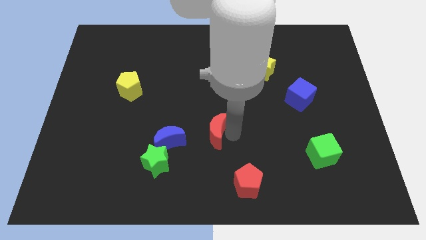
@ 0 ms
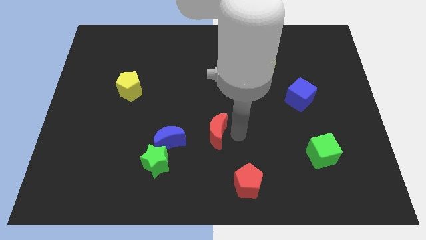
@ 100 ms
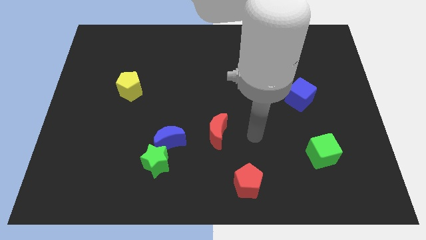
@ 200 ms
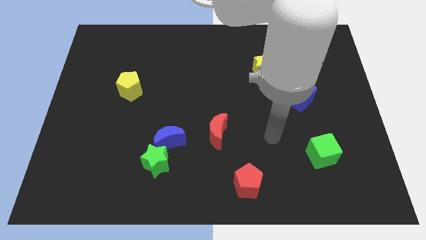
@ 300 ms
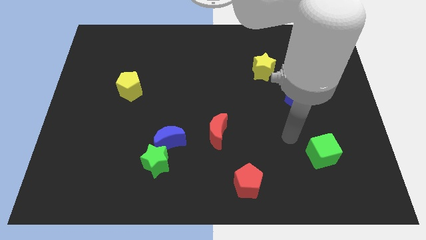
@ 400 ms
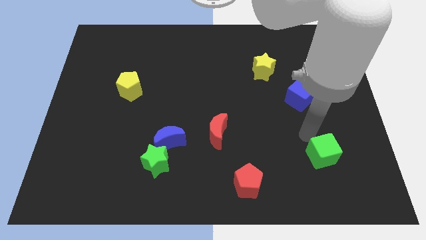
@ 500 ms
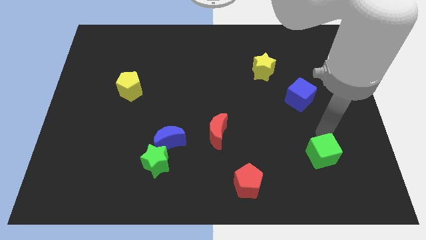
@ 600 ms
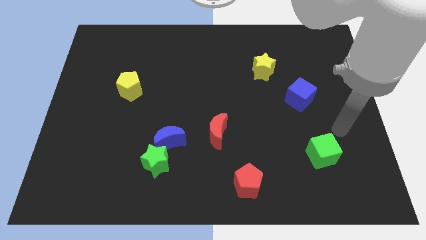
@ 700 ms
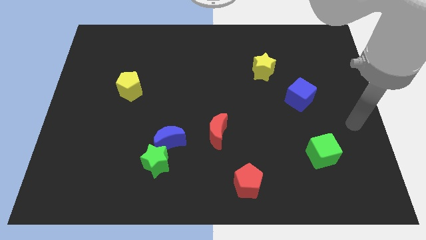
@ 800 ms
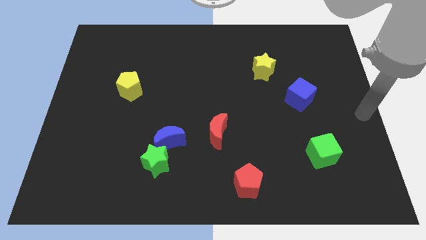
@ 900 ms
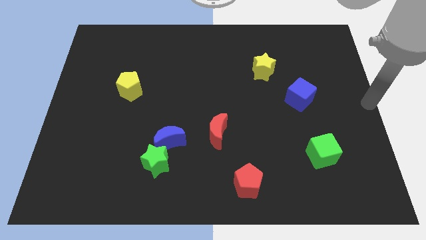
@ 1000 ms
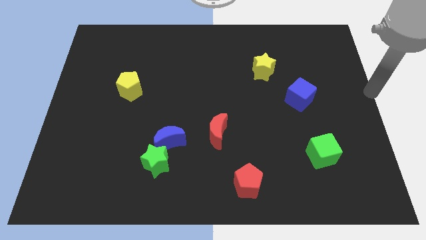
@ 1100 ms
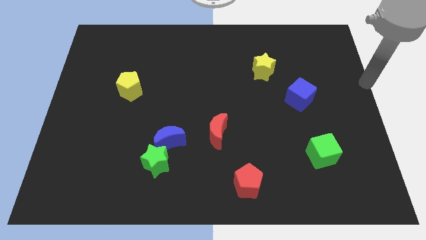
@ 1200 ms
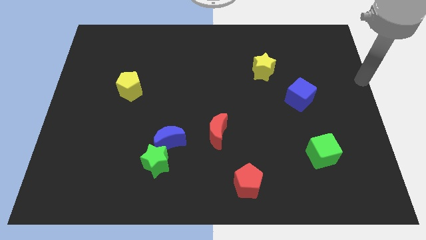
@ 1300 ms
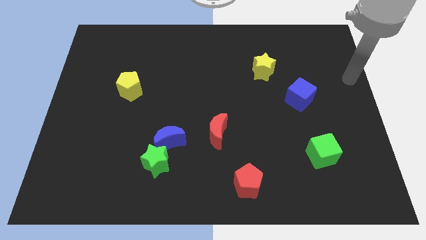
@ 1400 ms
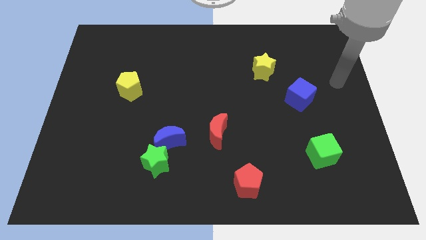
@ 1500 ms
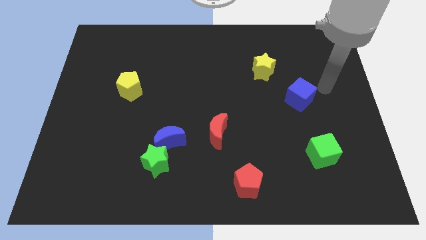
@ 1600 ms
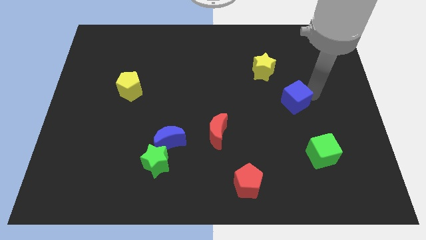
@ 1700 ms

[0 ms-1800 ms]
move your arm towards blue cube

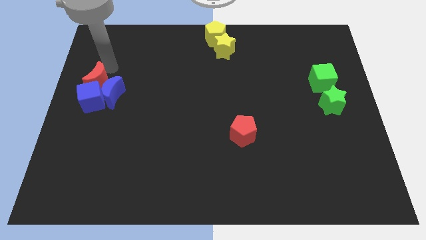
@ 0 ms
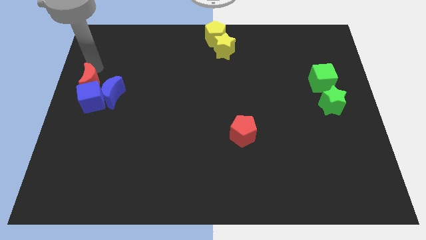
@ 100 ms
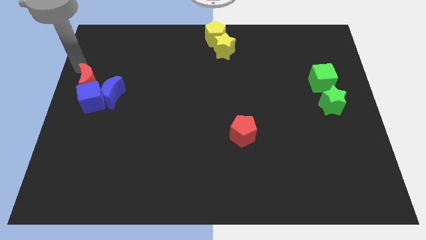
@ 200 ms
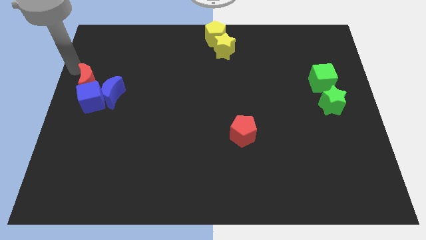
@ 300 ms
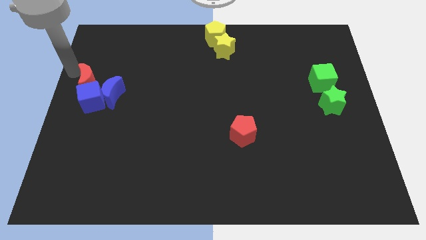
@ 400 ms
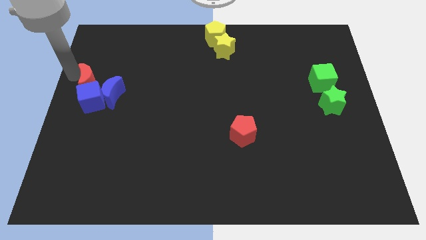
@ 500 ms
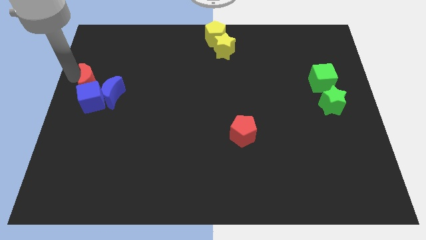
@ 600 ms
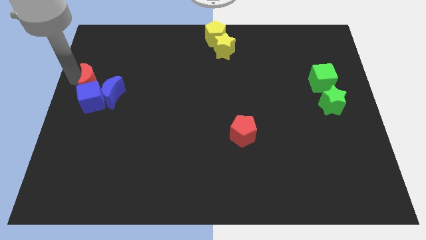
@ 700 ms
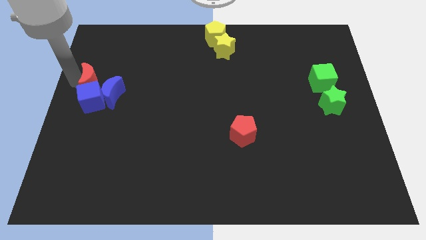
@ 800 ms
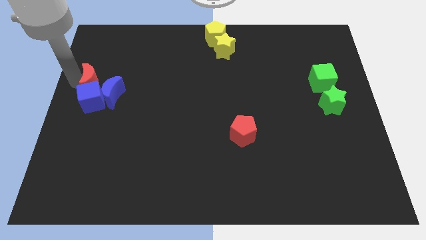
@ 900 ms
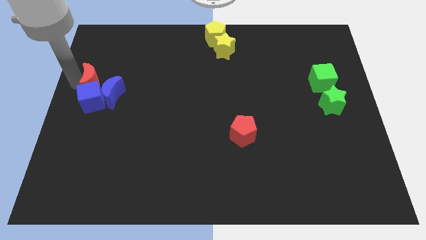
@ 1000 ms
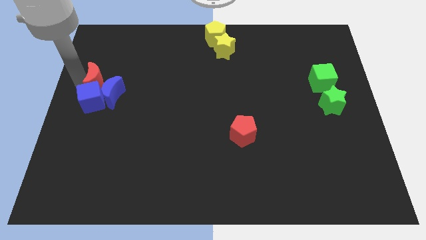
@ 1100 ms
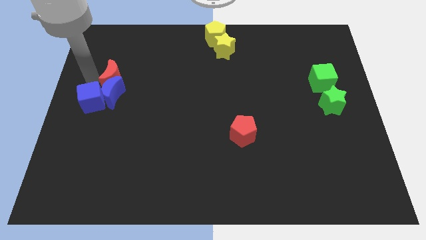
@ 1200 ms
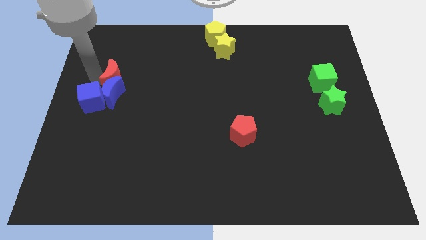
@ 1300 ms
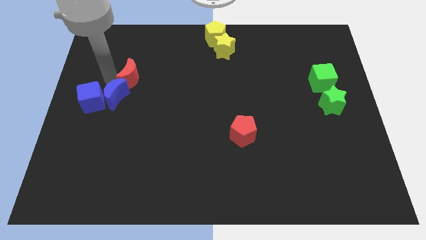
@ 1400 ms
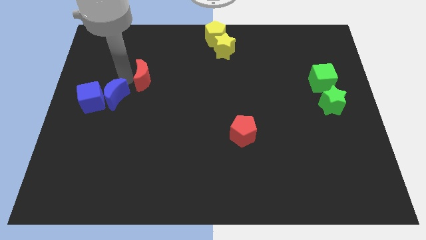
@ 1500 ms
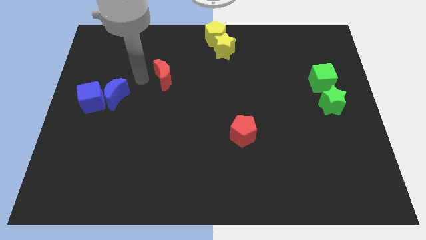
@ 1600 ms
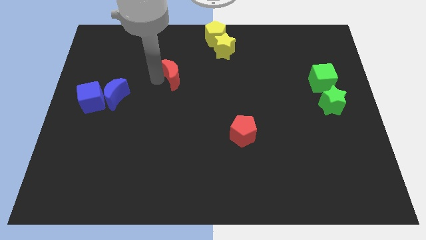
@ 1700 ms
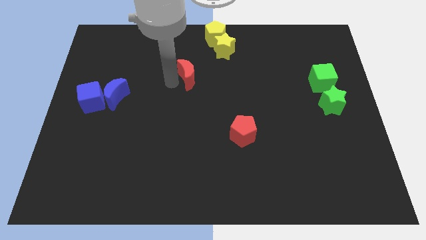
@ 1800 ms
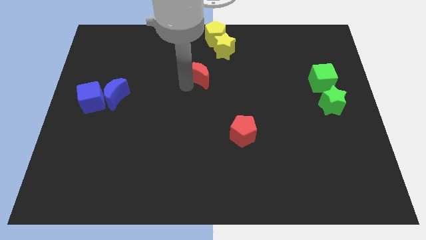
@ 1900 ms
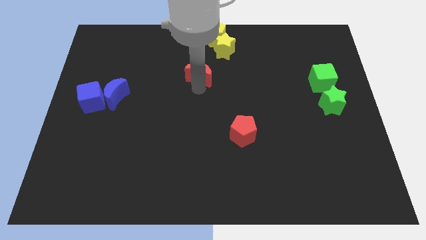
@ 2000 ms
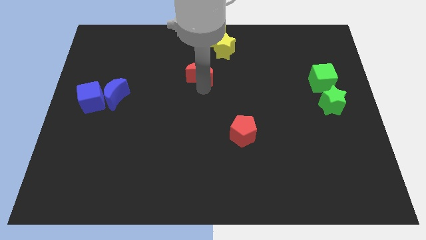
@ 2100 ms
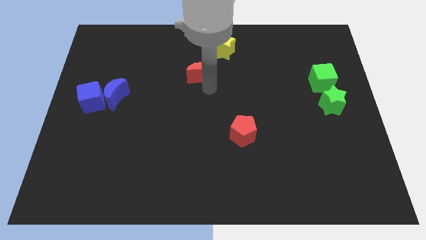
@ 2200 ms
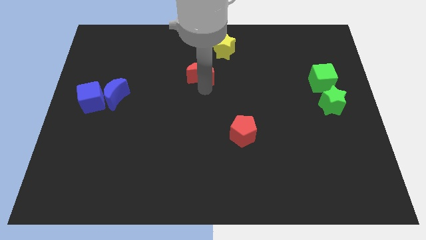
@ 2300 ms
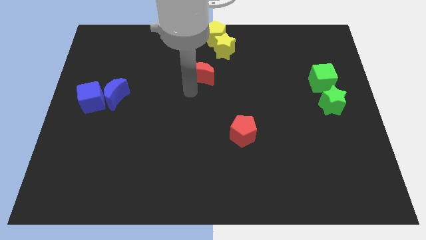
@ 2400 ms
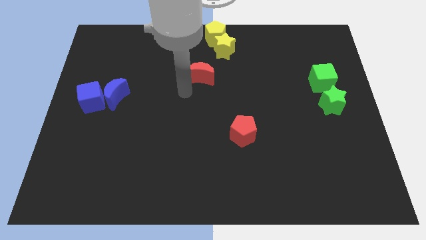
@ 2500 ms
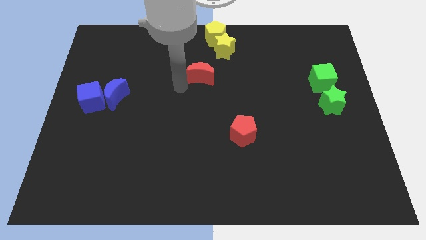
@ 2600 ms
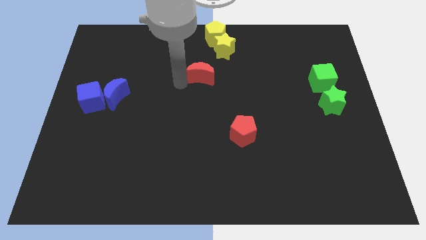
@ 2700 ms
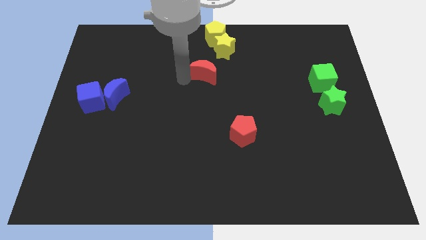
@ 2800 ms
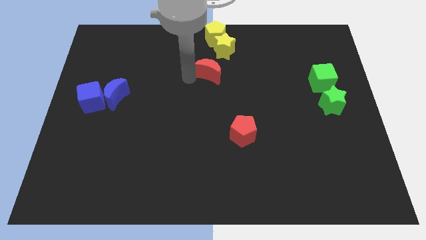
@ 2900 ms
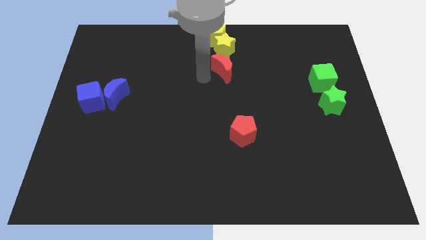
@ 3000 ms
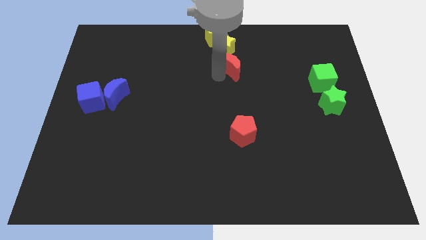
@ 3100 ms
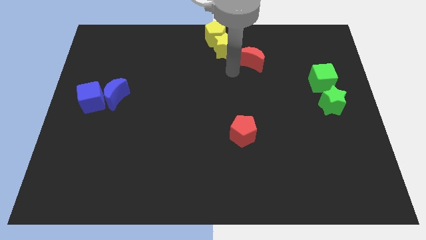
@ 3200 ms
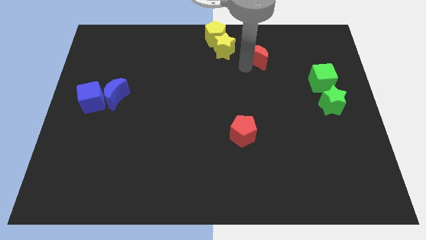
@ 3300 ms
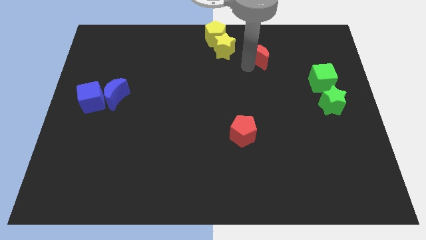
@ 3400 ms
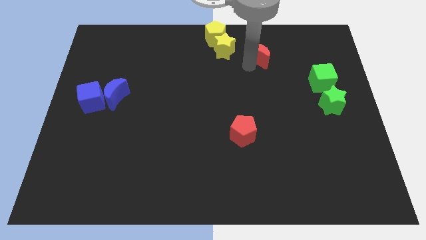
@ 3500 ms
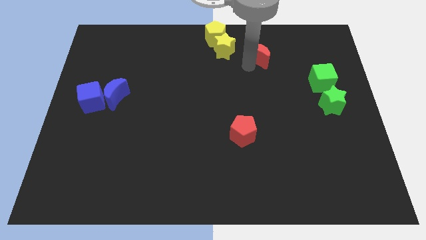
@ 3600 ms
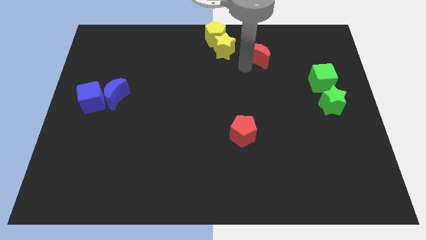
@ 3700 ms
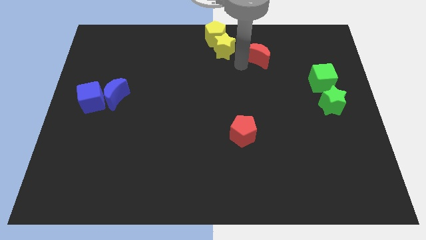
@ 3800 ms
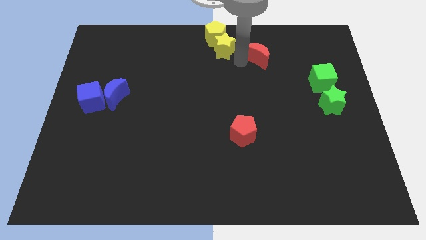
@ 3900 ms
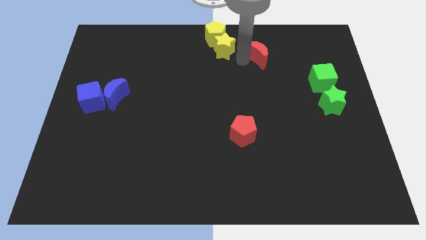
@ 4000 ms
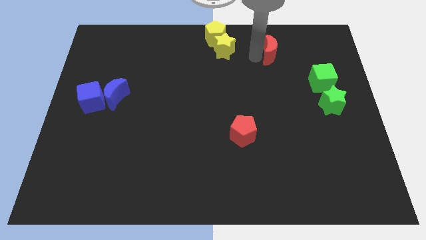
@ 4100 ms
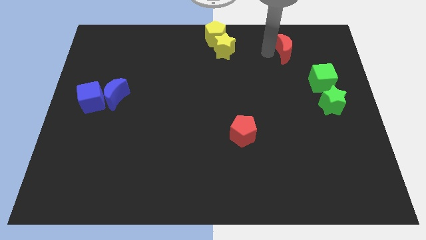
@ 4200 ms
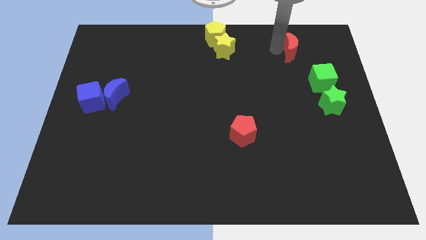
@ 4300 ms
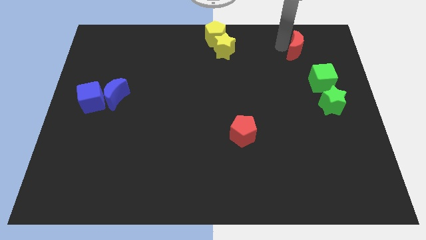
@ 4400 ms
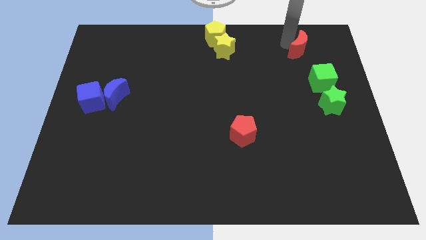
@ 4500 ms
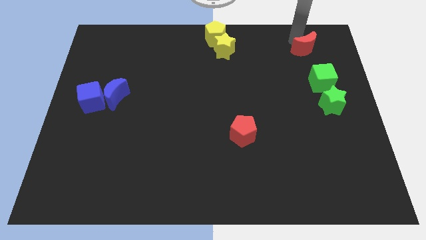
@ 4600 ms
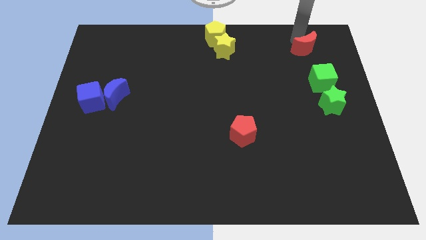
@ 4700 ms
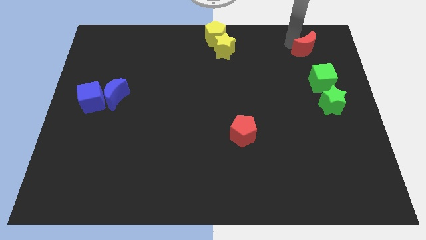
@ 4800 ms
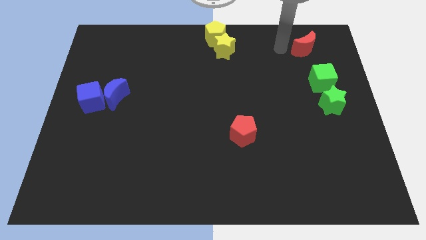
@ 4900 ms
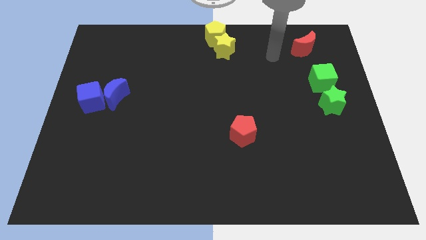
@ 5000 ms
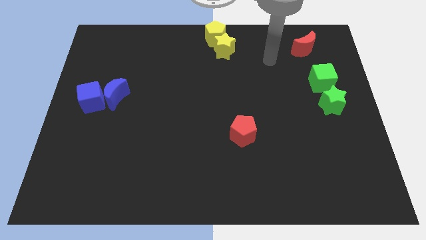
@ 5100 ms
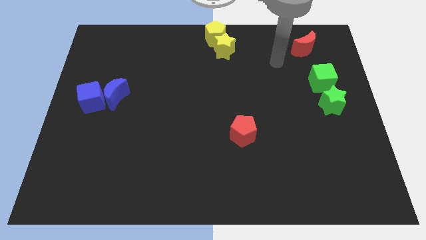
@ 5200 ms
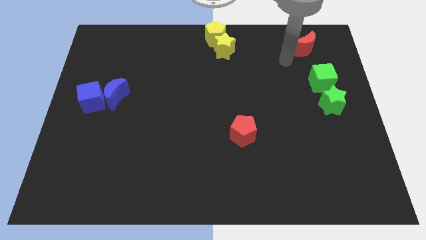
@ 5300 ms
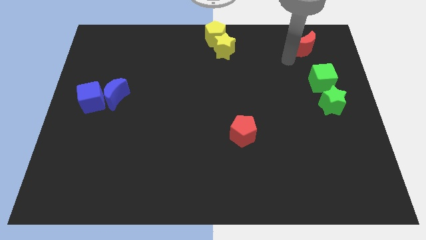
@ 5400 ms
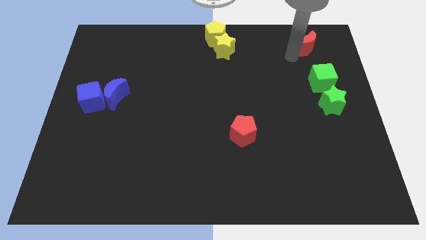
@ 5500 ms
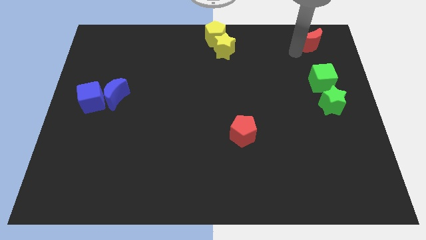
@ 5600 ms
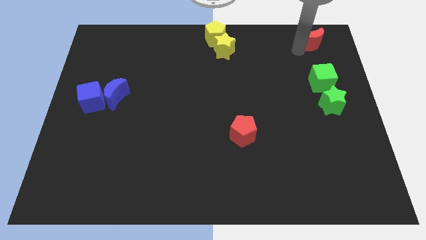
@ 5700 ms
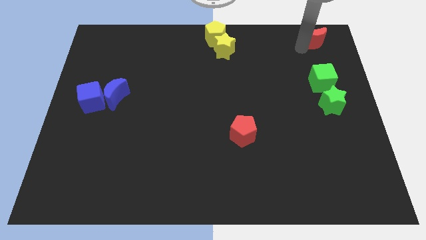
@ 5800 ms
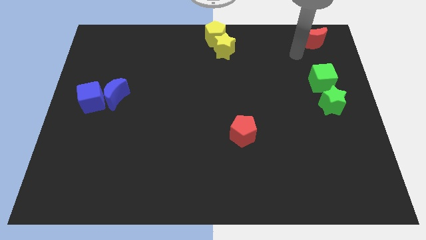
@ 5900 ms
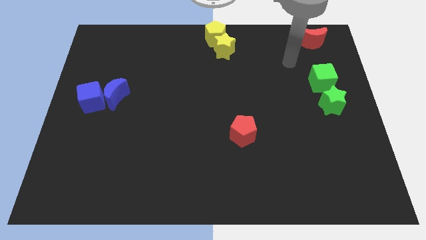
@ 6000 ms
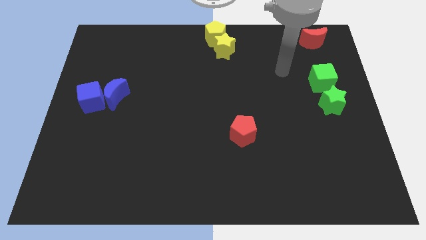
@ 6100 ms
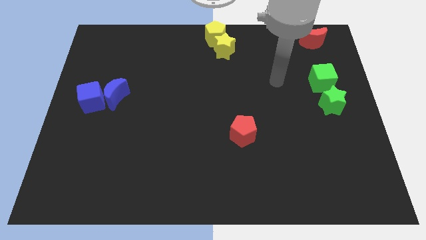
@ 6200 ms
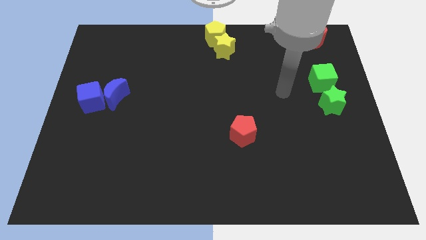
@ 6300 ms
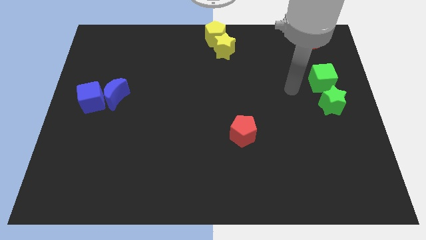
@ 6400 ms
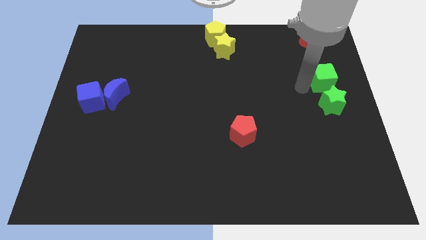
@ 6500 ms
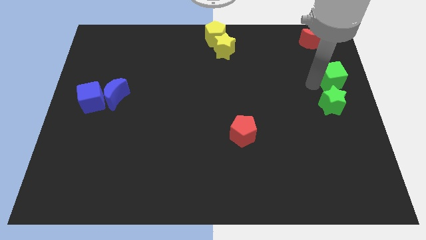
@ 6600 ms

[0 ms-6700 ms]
move the red crescent to the top right of the board

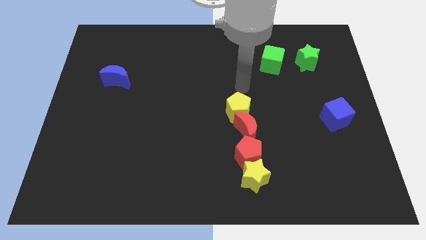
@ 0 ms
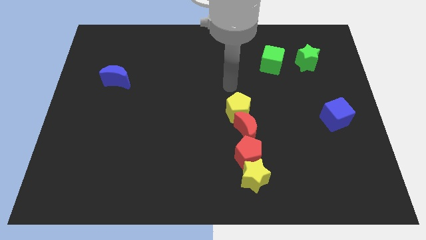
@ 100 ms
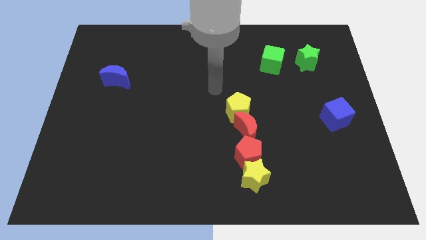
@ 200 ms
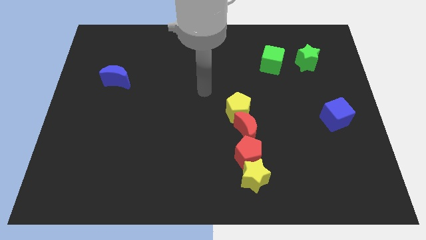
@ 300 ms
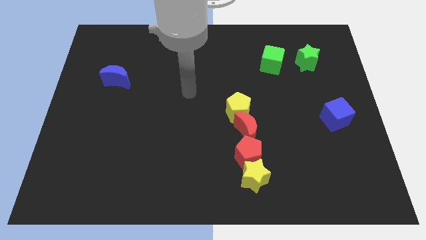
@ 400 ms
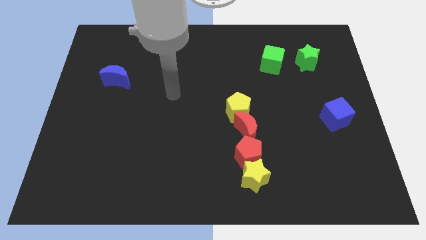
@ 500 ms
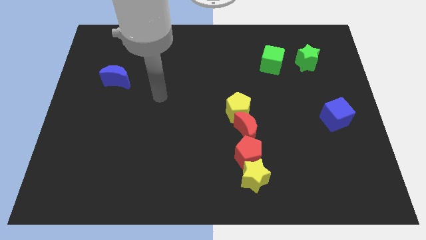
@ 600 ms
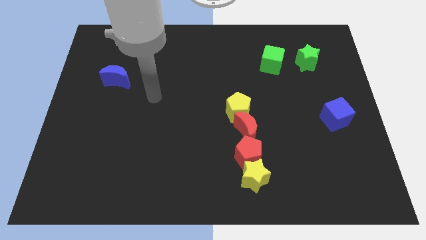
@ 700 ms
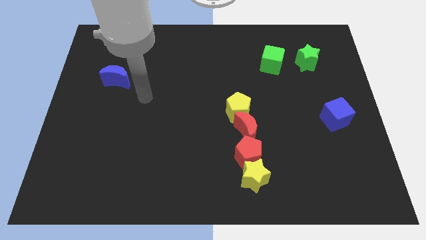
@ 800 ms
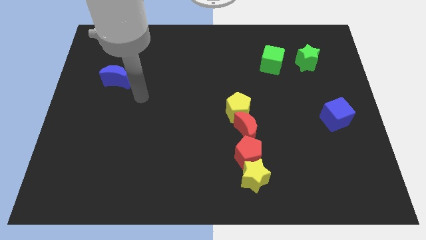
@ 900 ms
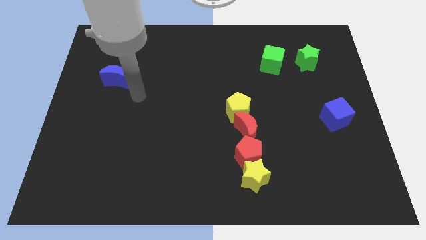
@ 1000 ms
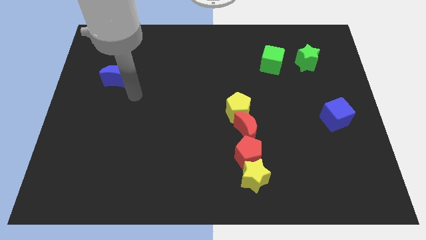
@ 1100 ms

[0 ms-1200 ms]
move your arm away from the yellow pentagon
